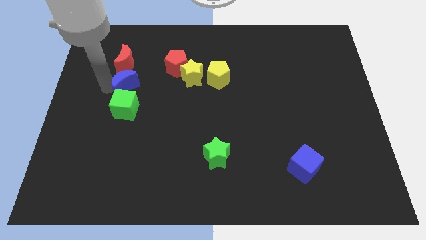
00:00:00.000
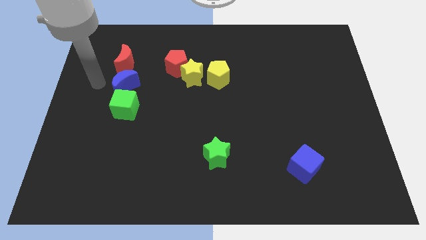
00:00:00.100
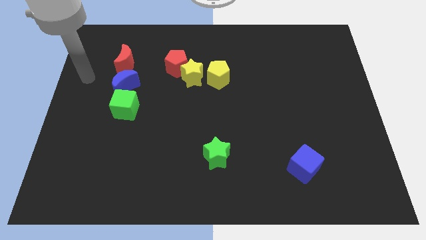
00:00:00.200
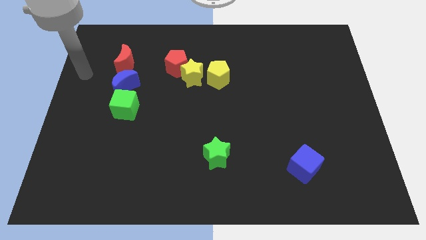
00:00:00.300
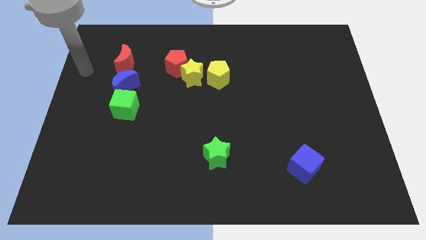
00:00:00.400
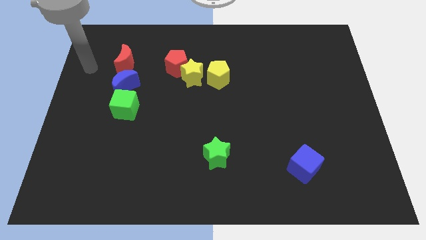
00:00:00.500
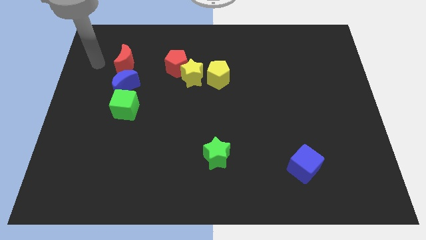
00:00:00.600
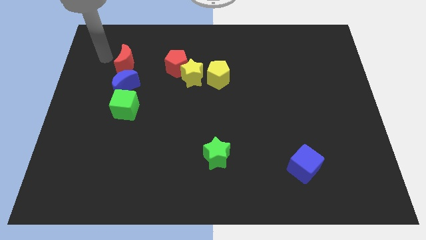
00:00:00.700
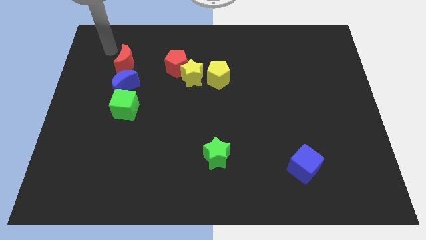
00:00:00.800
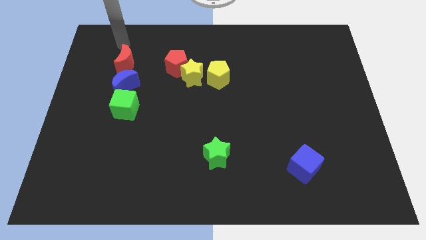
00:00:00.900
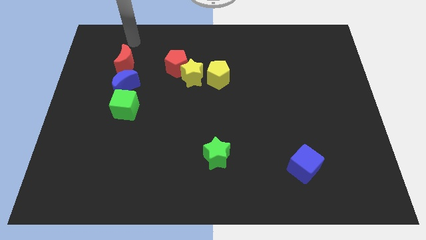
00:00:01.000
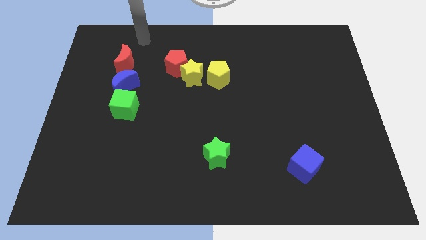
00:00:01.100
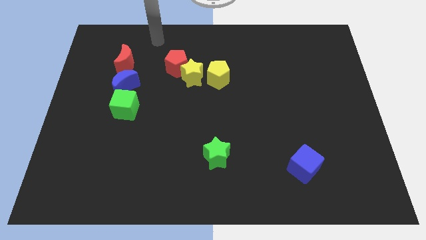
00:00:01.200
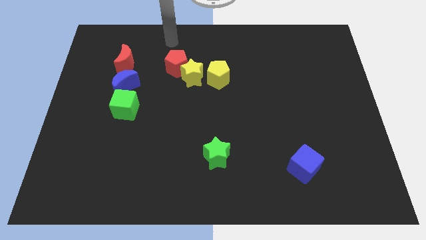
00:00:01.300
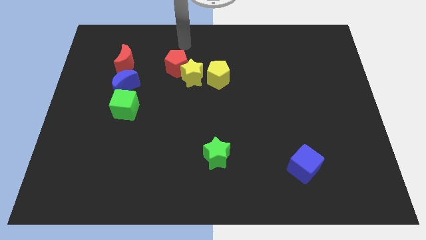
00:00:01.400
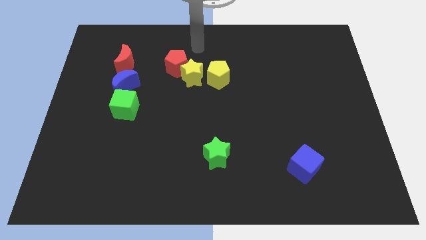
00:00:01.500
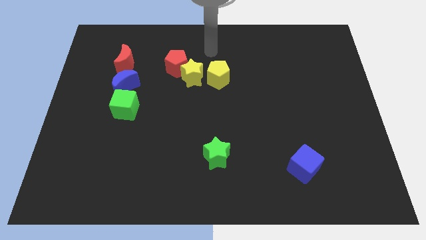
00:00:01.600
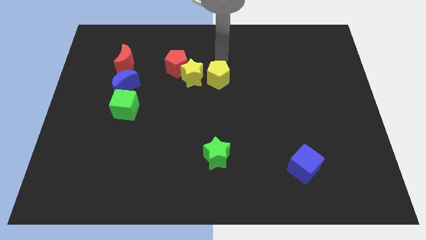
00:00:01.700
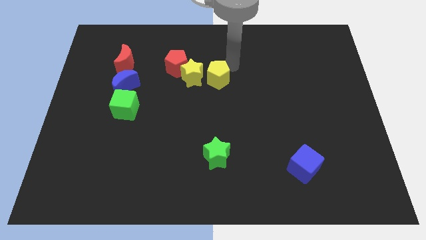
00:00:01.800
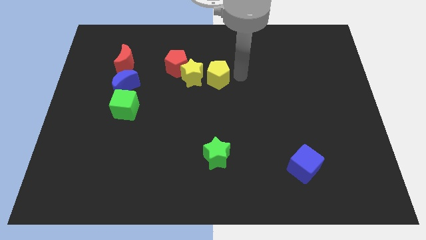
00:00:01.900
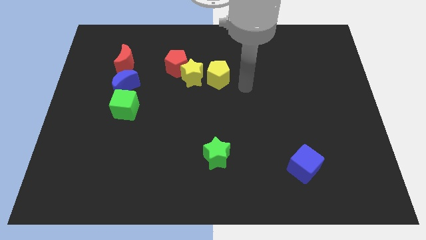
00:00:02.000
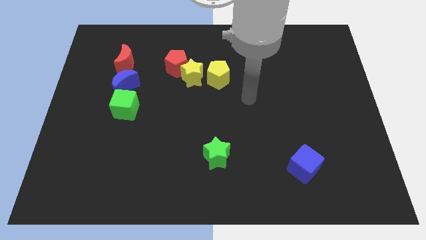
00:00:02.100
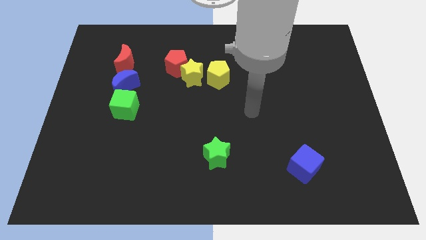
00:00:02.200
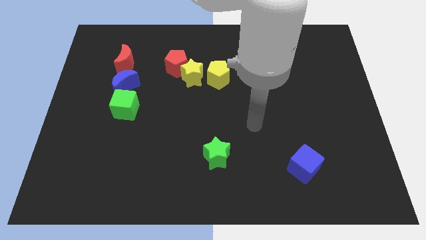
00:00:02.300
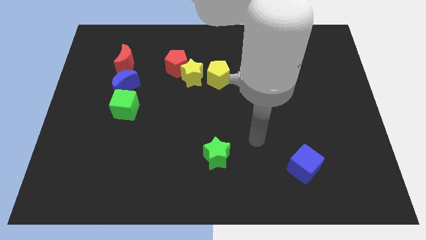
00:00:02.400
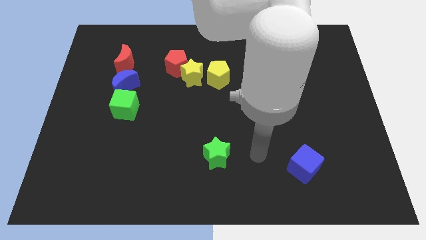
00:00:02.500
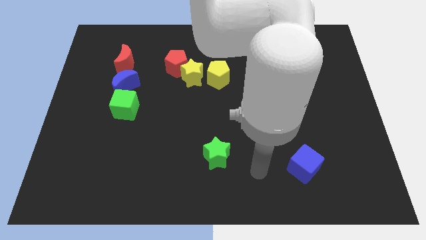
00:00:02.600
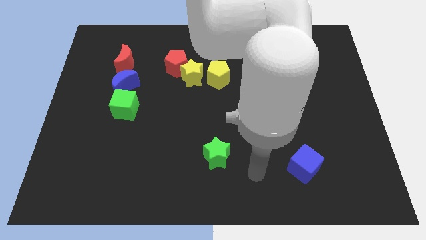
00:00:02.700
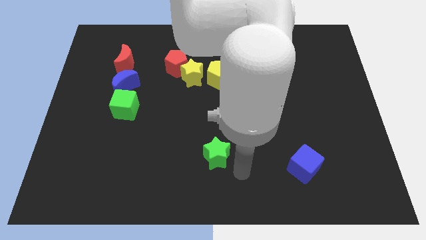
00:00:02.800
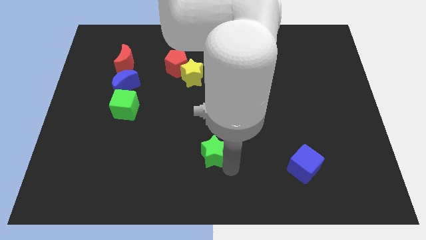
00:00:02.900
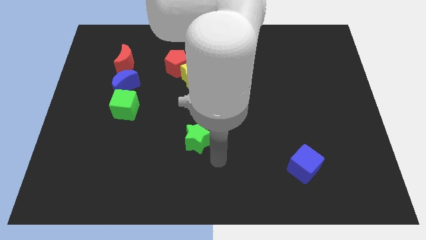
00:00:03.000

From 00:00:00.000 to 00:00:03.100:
move your arm away from the blue moon

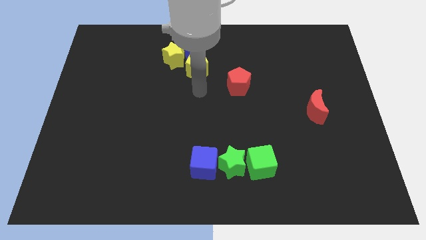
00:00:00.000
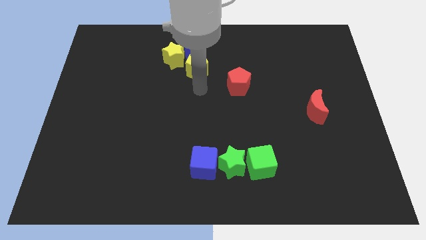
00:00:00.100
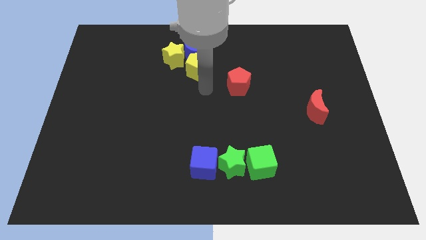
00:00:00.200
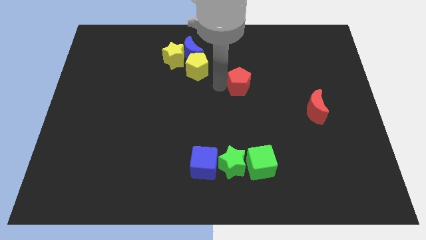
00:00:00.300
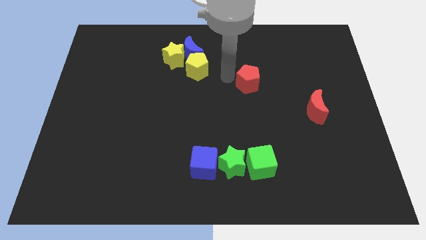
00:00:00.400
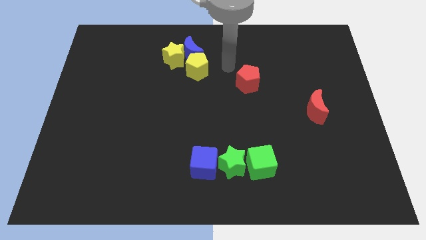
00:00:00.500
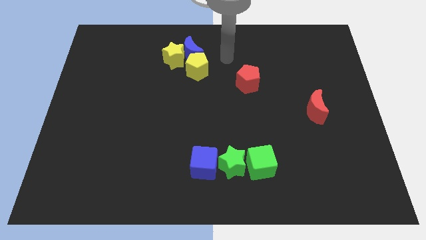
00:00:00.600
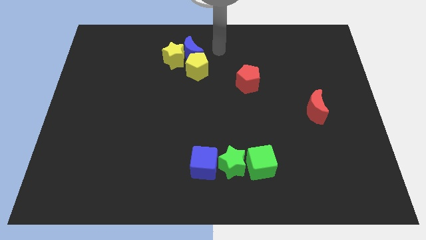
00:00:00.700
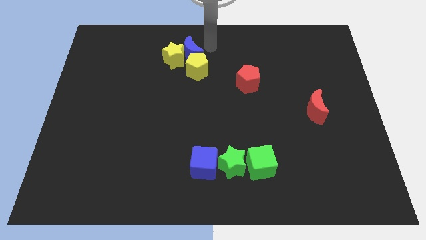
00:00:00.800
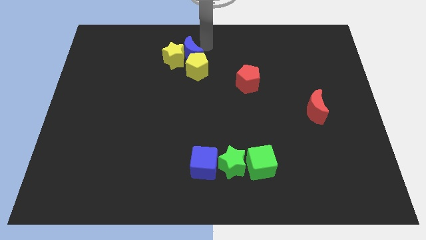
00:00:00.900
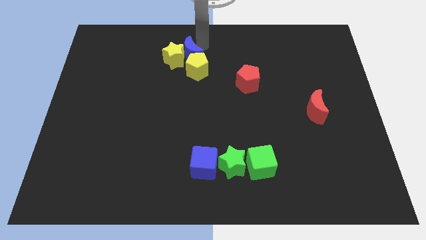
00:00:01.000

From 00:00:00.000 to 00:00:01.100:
move arm to center top

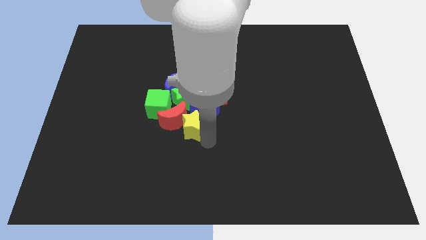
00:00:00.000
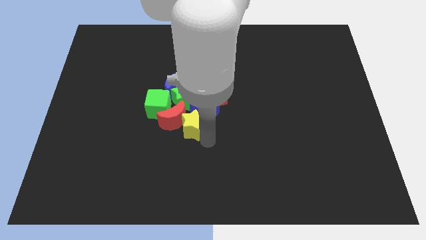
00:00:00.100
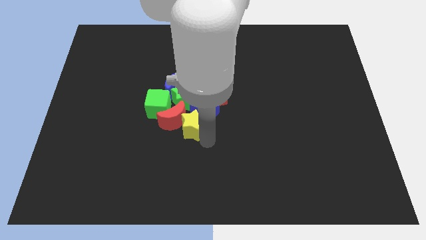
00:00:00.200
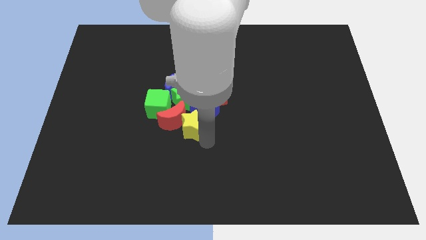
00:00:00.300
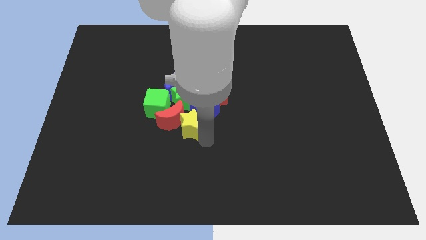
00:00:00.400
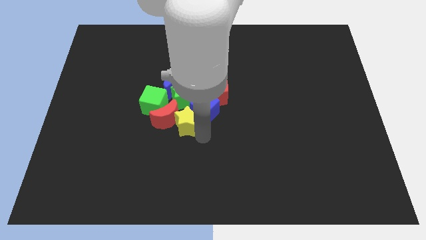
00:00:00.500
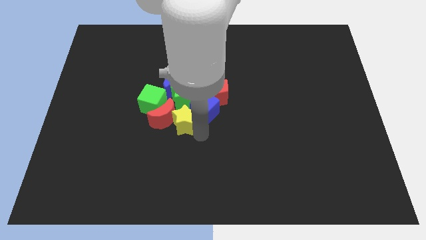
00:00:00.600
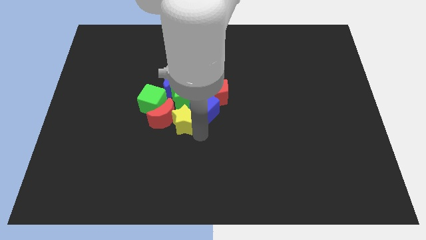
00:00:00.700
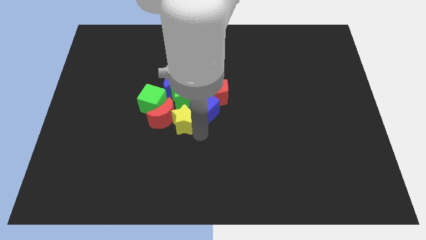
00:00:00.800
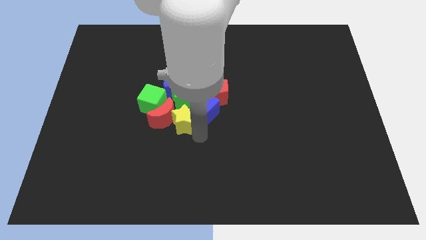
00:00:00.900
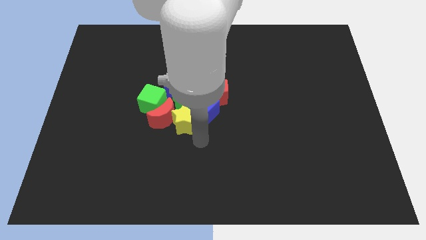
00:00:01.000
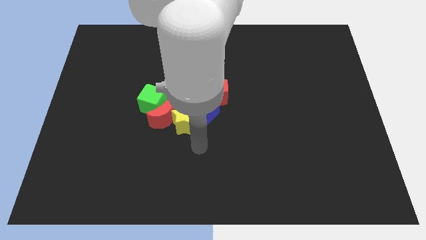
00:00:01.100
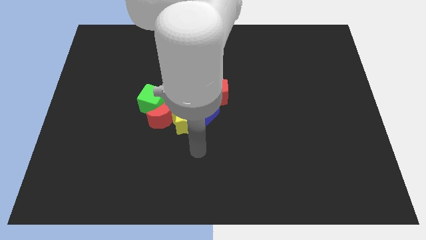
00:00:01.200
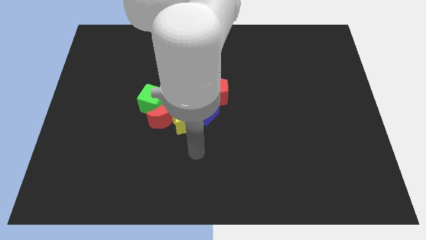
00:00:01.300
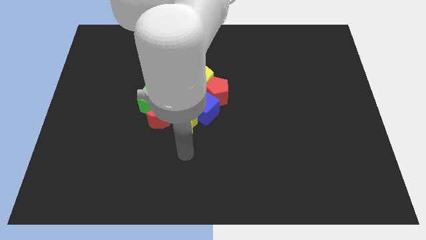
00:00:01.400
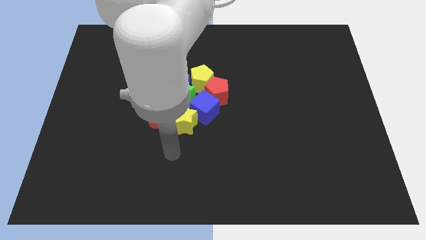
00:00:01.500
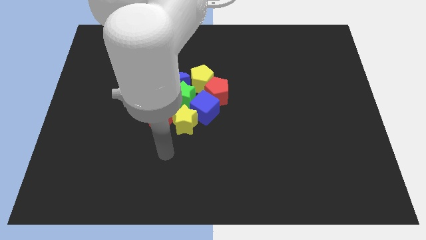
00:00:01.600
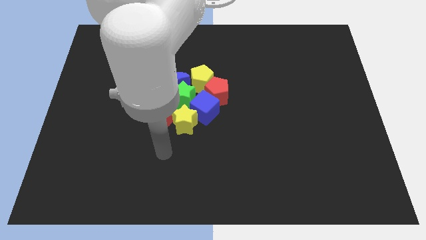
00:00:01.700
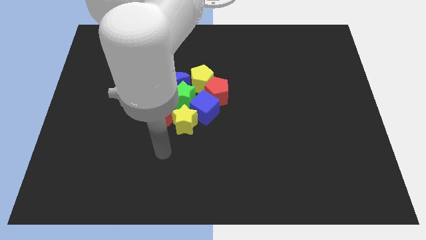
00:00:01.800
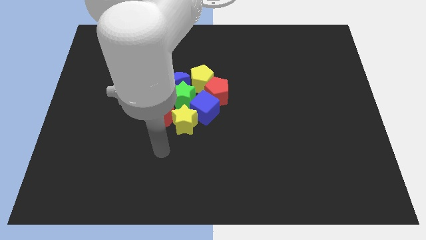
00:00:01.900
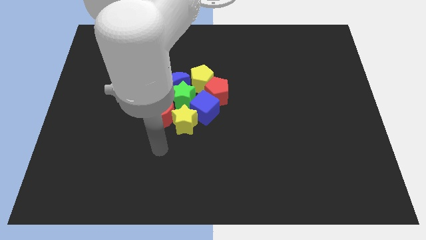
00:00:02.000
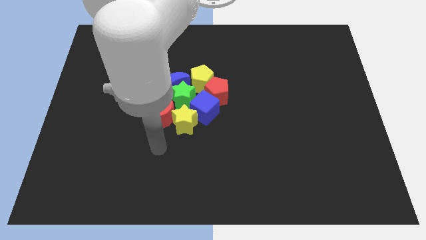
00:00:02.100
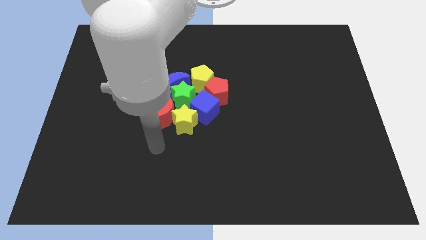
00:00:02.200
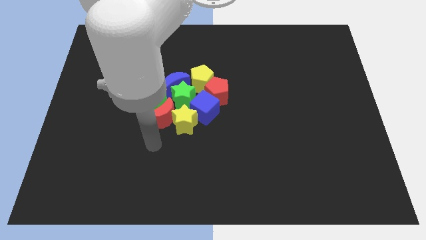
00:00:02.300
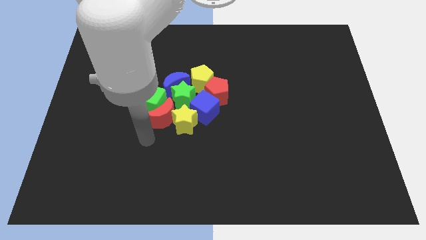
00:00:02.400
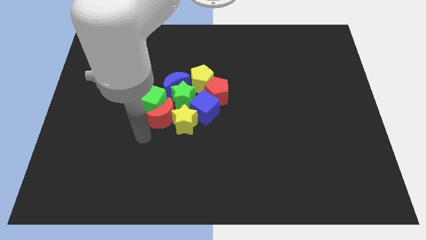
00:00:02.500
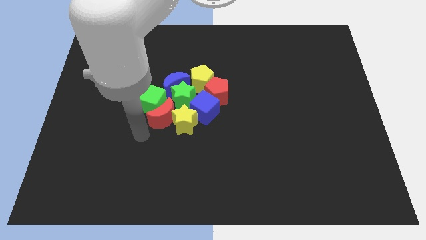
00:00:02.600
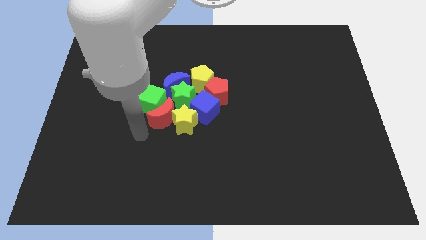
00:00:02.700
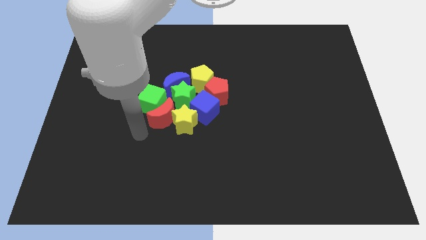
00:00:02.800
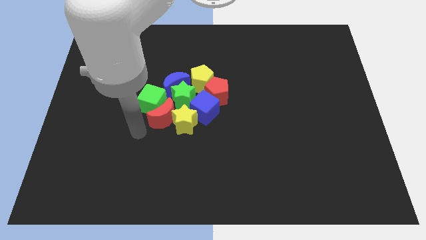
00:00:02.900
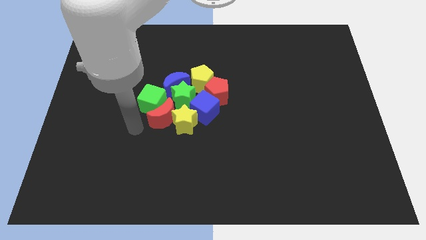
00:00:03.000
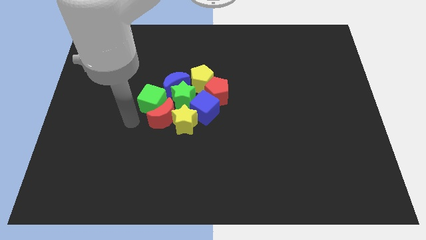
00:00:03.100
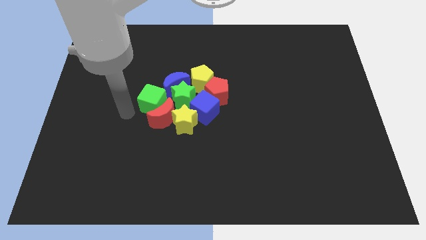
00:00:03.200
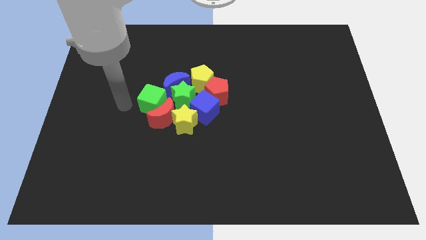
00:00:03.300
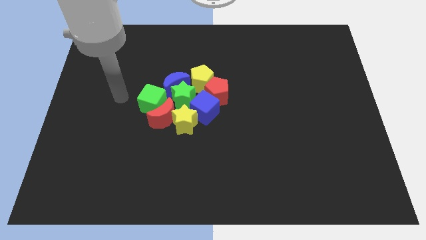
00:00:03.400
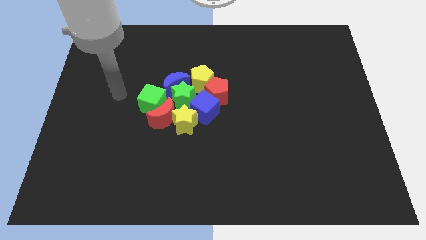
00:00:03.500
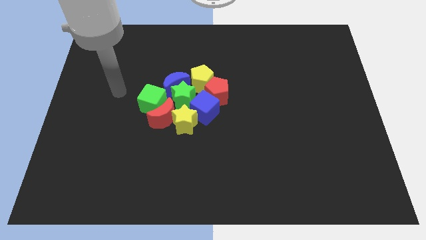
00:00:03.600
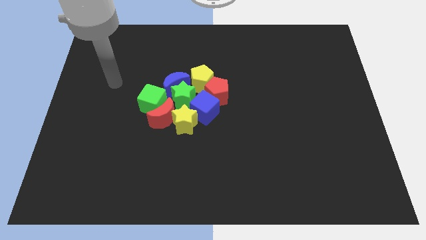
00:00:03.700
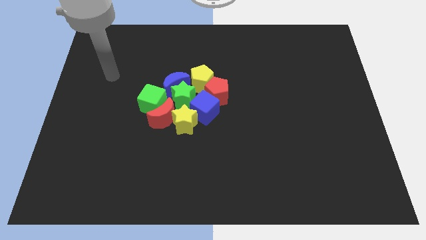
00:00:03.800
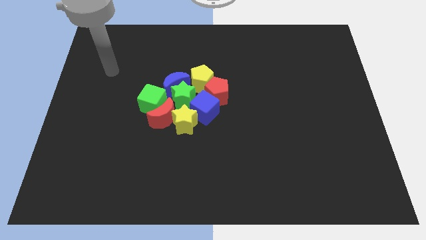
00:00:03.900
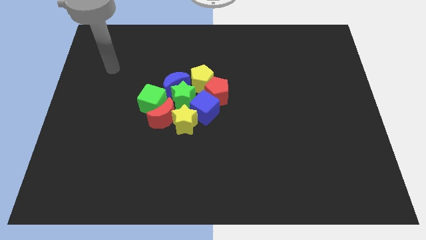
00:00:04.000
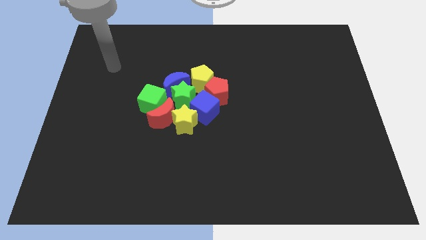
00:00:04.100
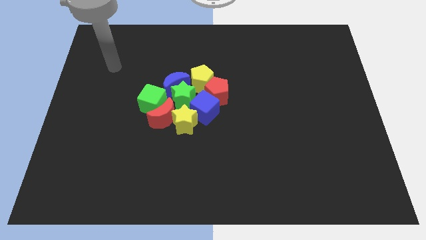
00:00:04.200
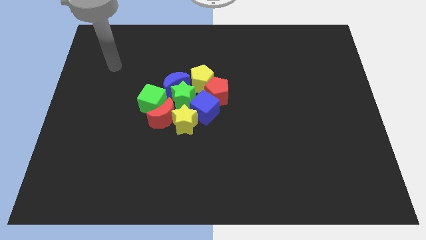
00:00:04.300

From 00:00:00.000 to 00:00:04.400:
move the yellow star into a group of blocks

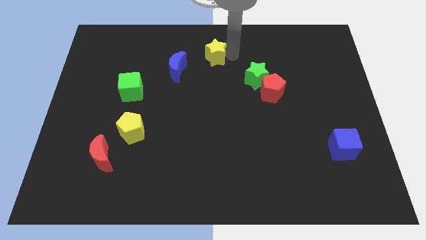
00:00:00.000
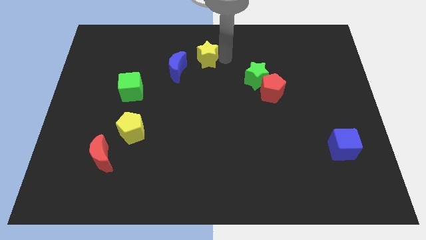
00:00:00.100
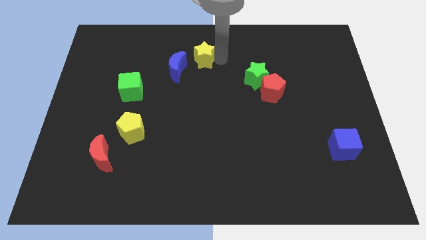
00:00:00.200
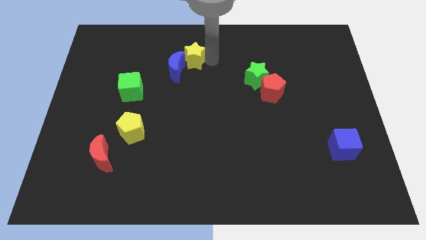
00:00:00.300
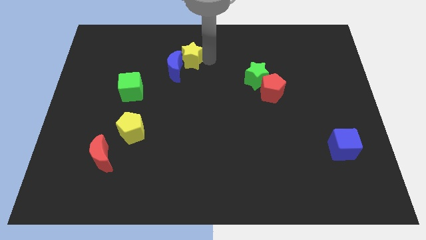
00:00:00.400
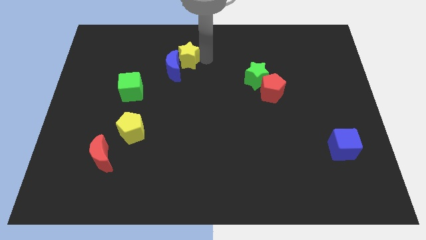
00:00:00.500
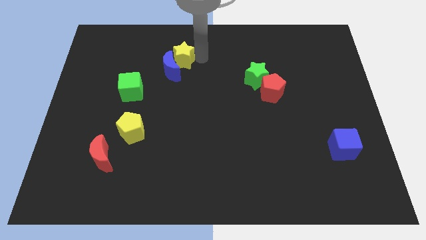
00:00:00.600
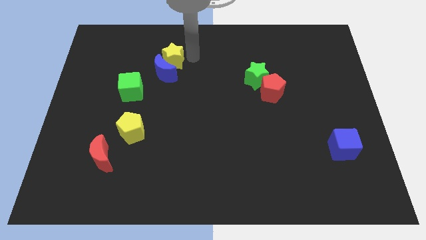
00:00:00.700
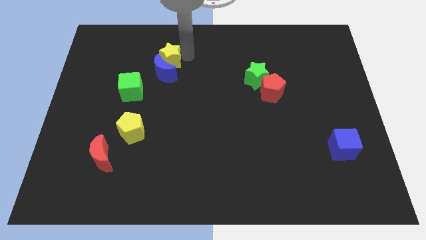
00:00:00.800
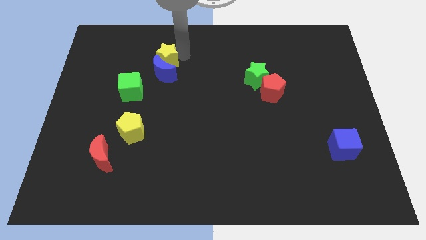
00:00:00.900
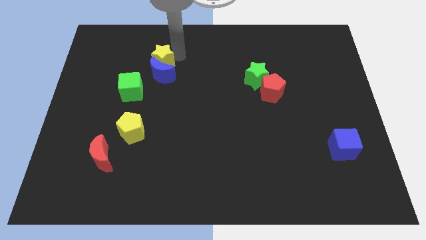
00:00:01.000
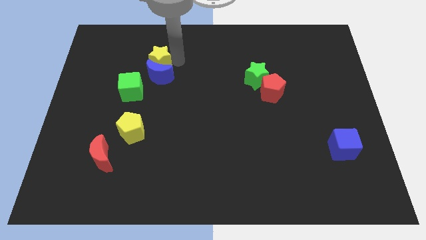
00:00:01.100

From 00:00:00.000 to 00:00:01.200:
push the yellow star into the blue moon
